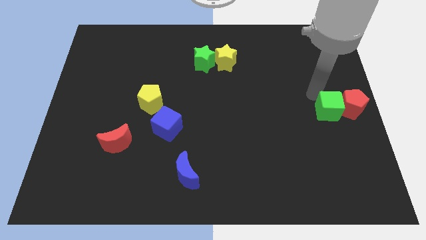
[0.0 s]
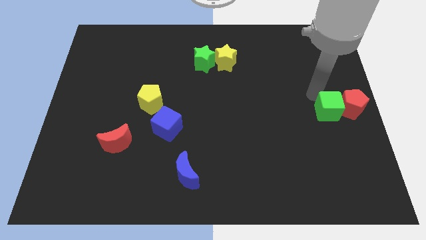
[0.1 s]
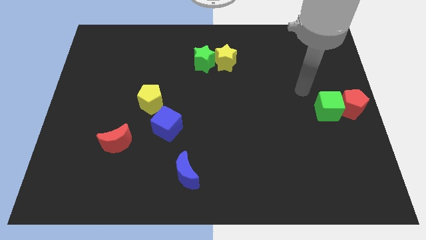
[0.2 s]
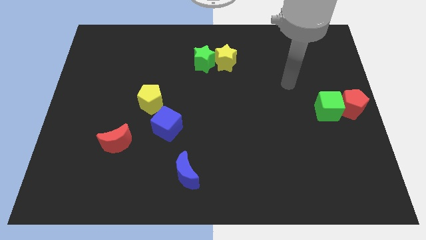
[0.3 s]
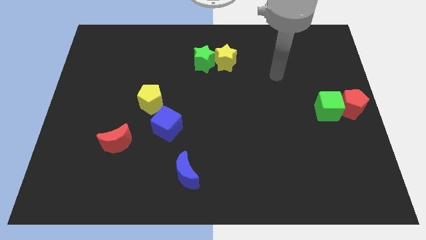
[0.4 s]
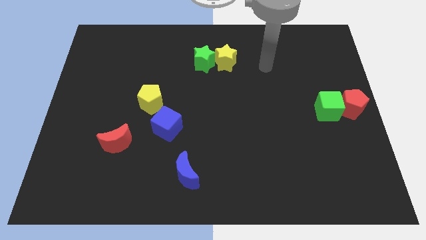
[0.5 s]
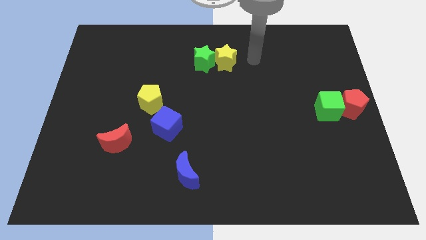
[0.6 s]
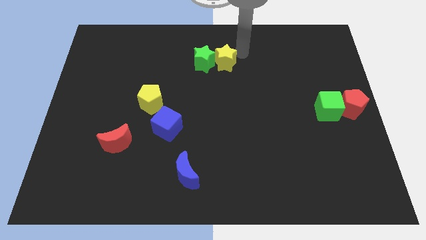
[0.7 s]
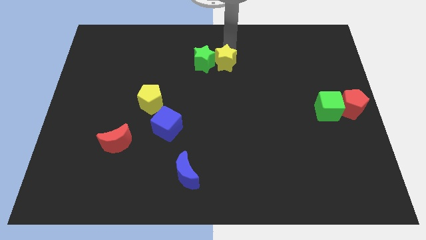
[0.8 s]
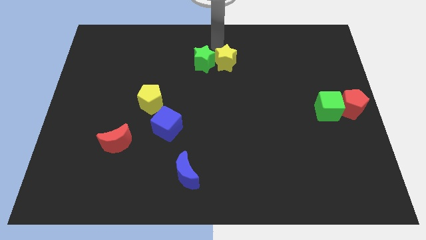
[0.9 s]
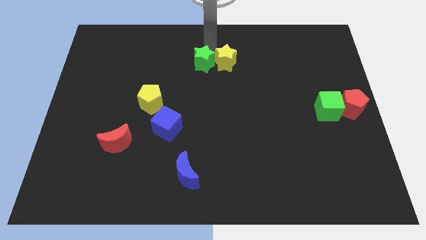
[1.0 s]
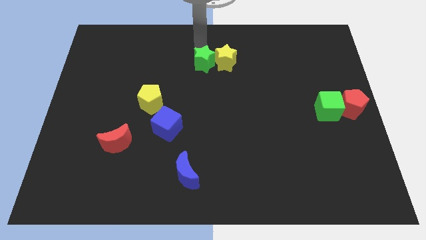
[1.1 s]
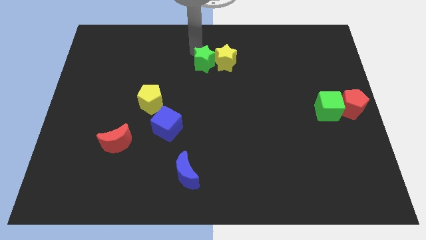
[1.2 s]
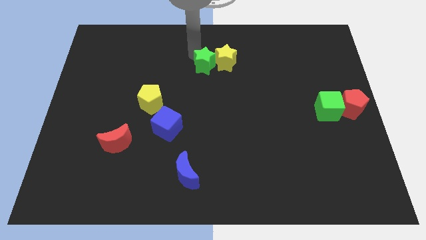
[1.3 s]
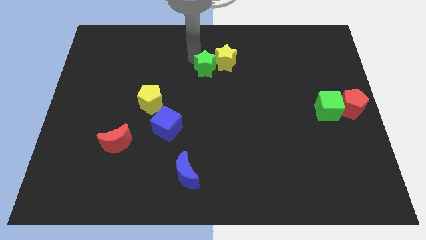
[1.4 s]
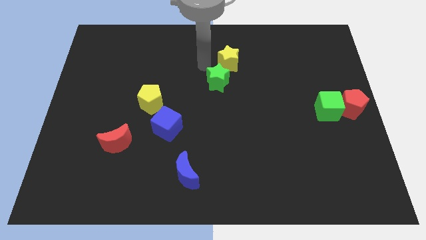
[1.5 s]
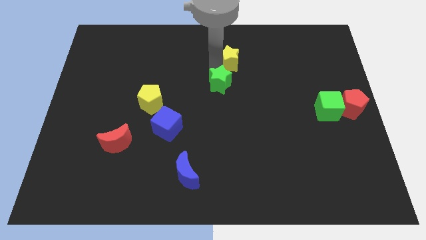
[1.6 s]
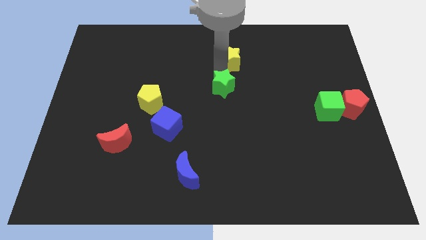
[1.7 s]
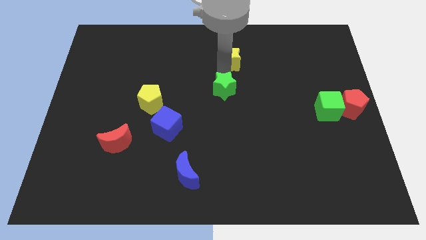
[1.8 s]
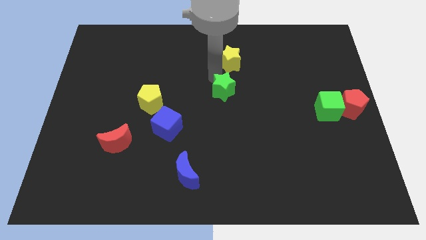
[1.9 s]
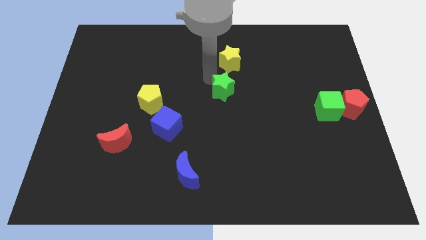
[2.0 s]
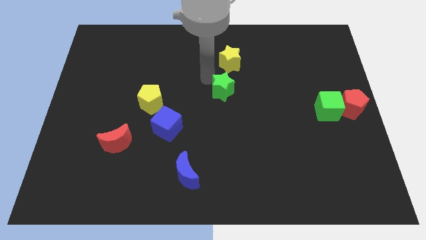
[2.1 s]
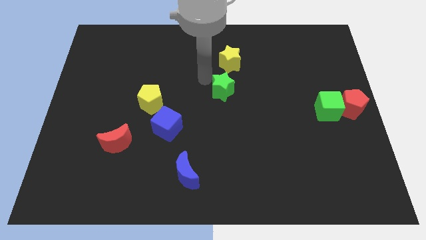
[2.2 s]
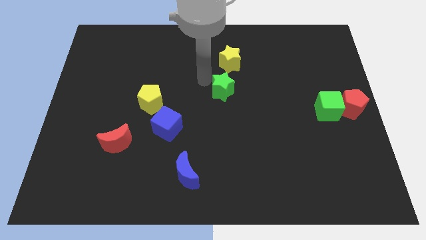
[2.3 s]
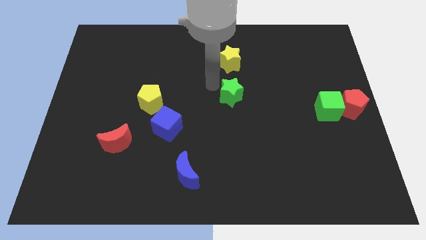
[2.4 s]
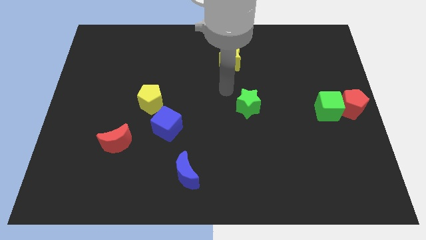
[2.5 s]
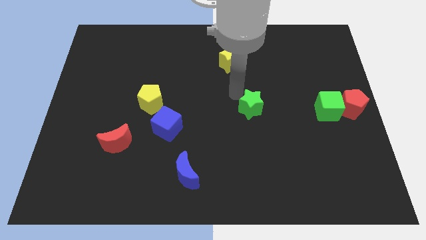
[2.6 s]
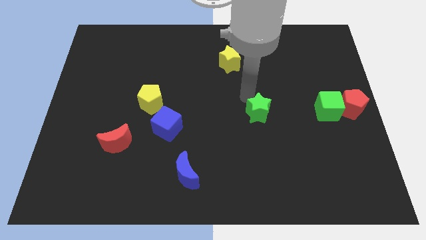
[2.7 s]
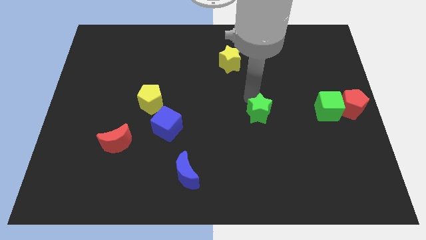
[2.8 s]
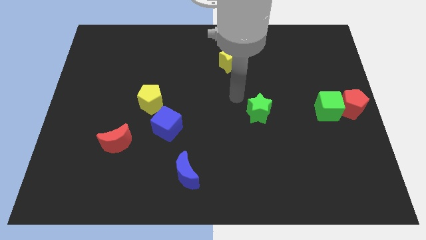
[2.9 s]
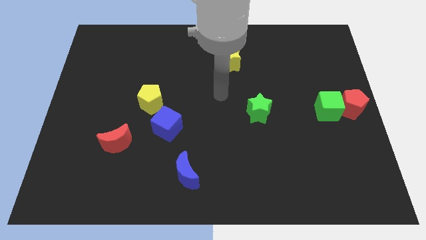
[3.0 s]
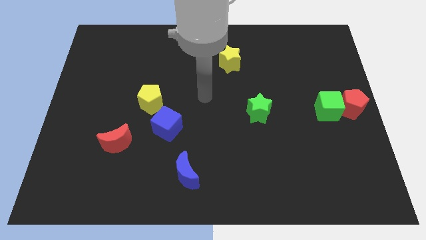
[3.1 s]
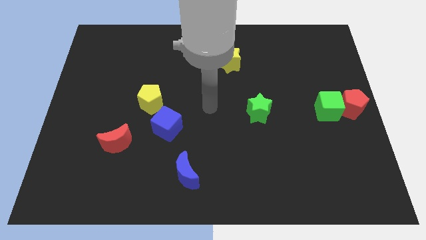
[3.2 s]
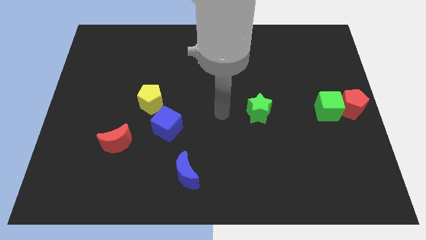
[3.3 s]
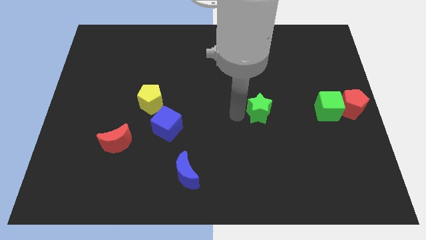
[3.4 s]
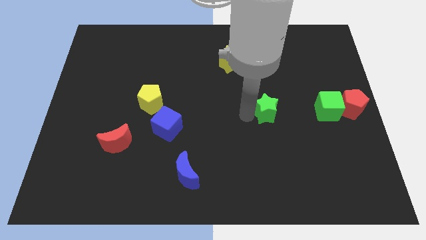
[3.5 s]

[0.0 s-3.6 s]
place the green star right to the blue cube

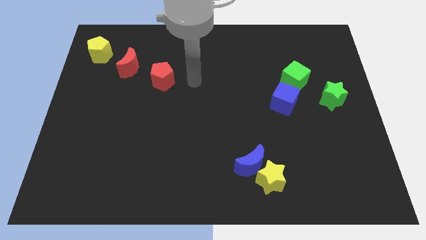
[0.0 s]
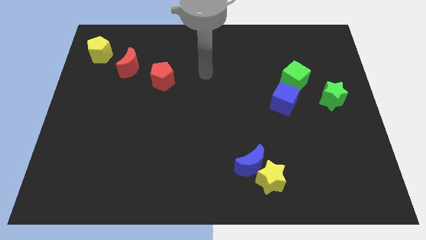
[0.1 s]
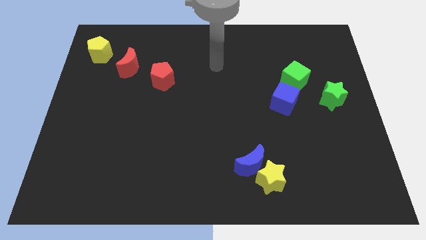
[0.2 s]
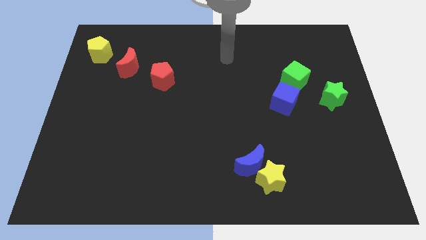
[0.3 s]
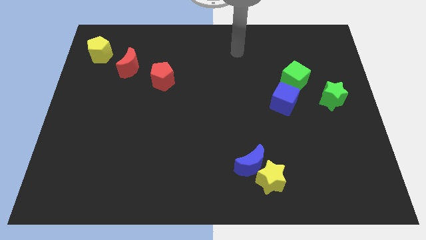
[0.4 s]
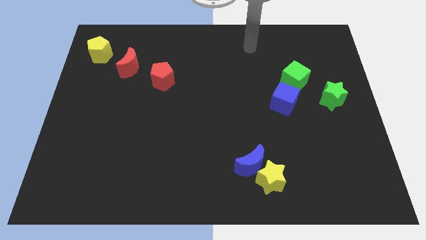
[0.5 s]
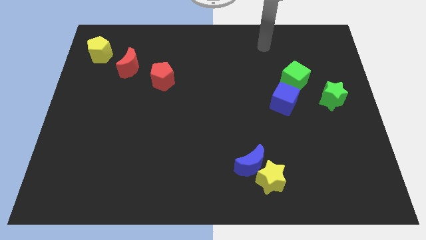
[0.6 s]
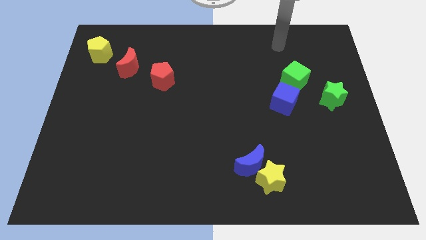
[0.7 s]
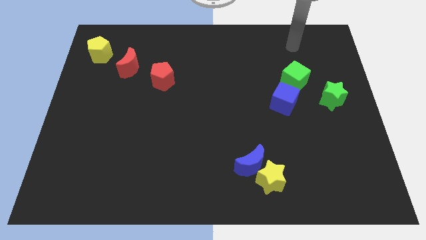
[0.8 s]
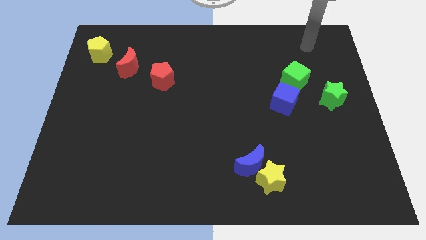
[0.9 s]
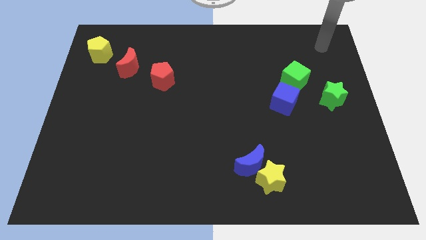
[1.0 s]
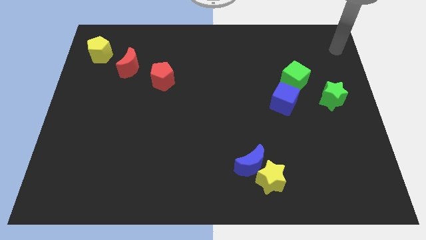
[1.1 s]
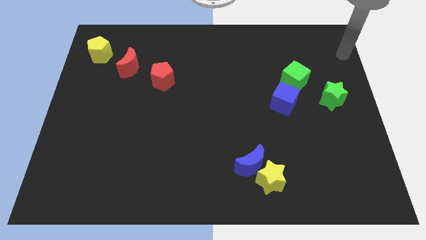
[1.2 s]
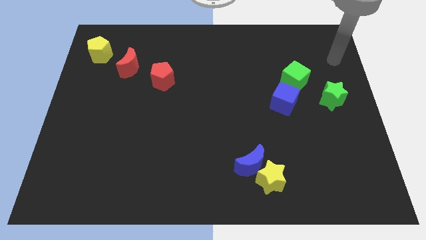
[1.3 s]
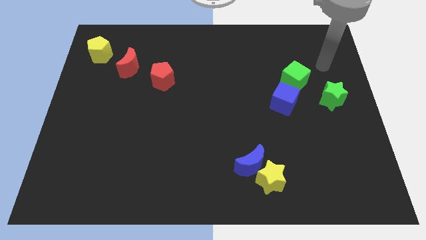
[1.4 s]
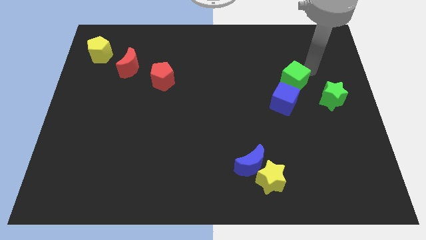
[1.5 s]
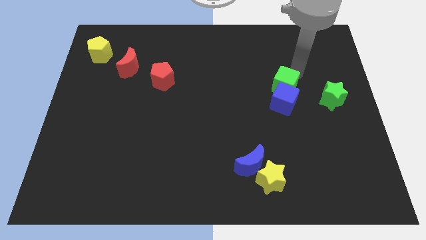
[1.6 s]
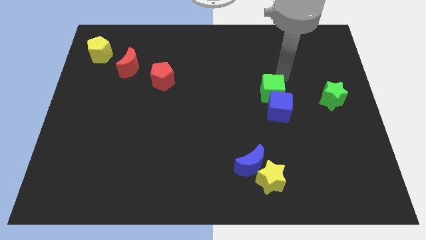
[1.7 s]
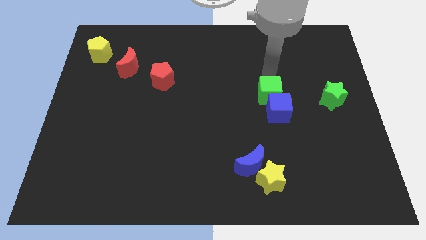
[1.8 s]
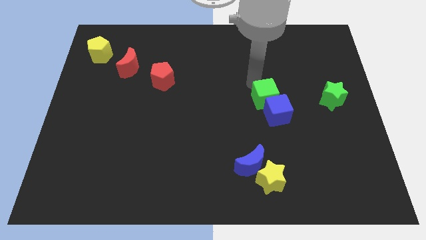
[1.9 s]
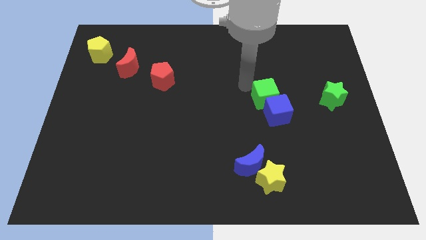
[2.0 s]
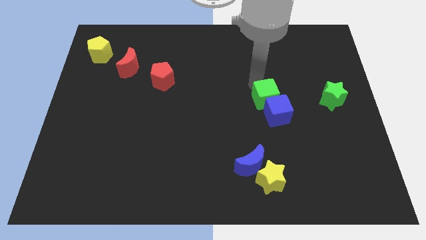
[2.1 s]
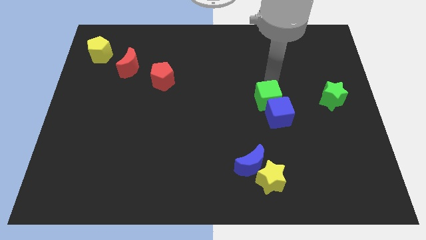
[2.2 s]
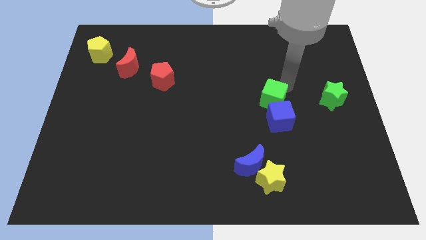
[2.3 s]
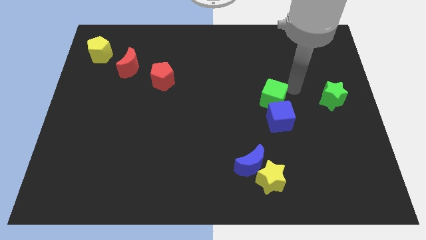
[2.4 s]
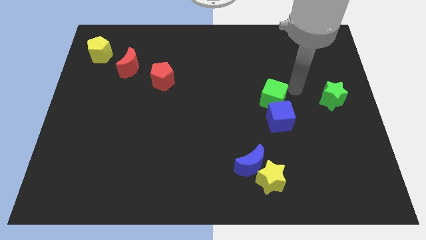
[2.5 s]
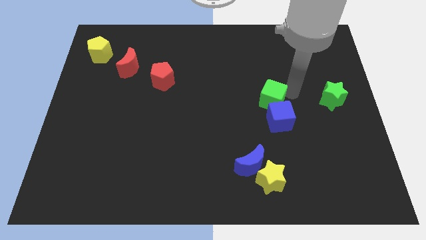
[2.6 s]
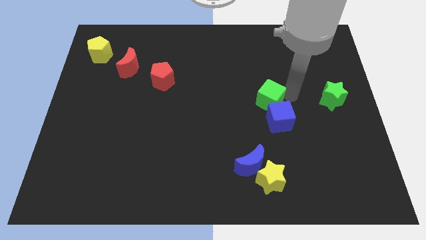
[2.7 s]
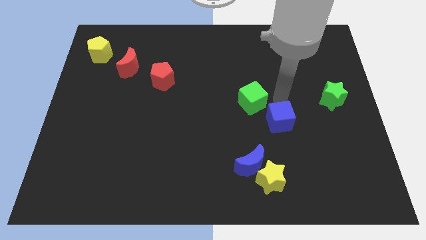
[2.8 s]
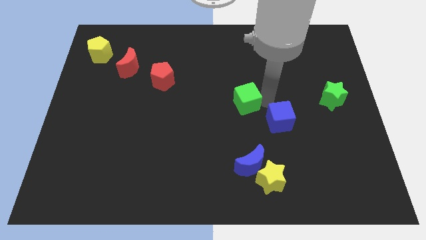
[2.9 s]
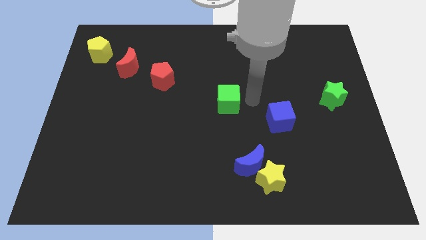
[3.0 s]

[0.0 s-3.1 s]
separate green cube and the blue cube

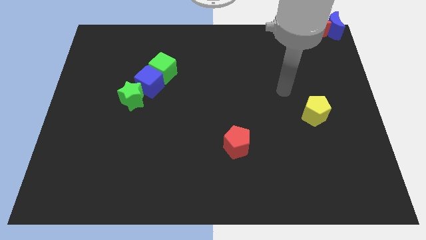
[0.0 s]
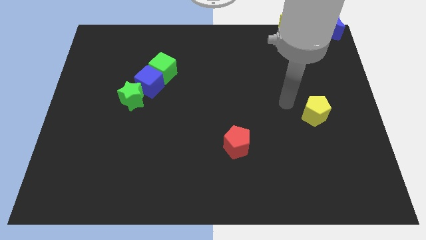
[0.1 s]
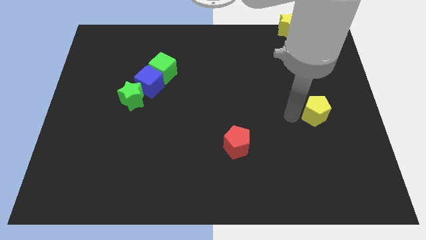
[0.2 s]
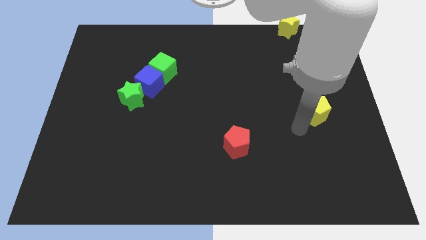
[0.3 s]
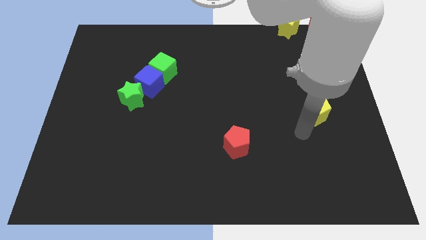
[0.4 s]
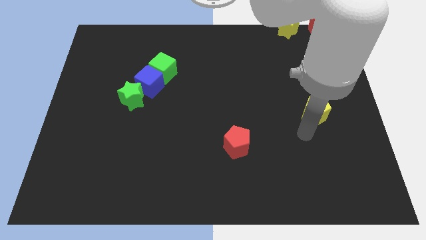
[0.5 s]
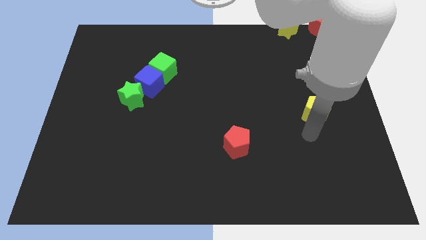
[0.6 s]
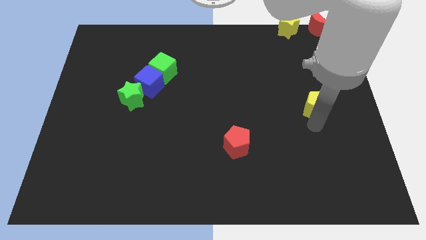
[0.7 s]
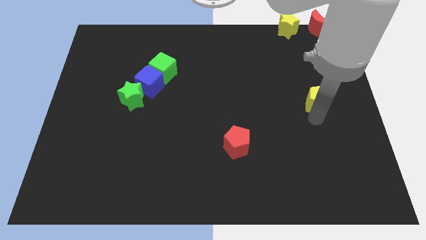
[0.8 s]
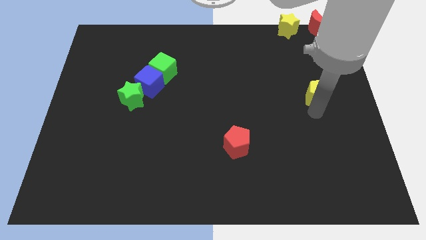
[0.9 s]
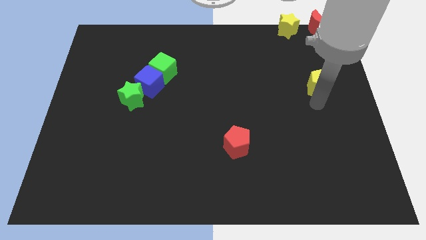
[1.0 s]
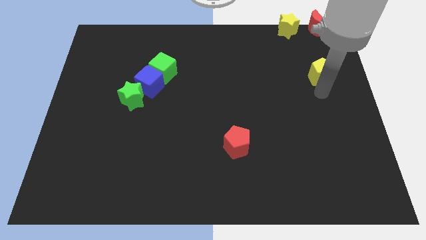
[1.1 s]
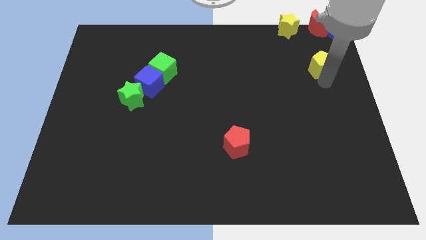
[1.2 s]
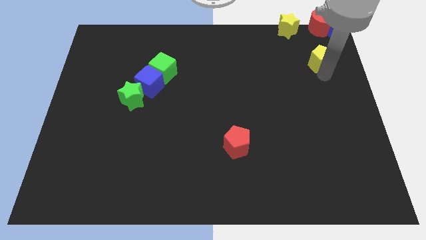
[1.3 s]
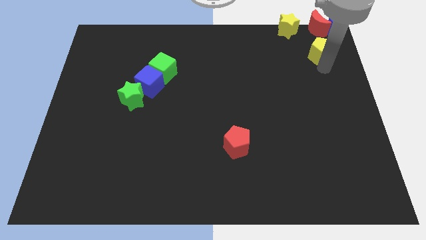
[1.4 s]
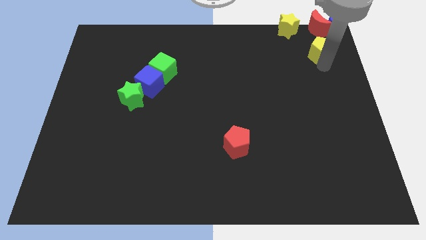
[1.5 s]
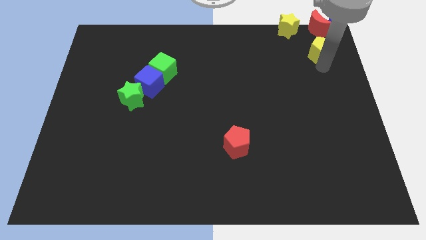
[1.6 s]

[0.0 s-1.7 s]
push the yellow pentagon below the red crescent

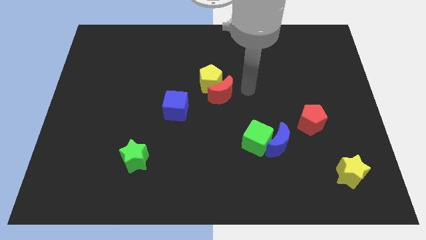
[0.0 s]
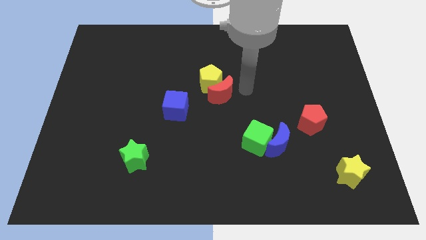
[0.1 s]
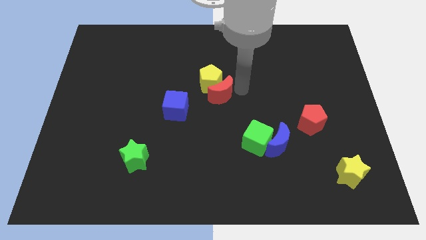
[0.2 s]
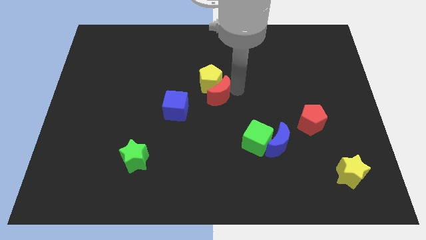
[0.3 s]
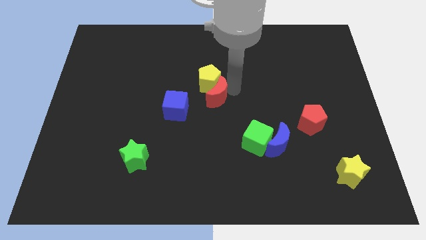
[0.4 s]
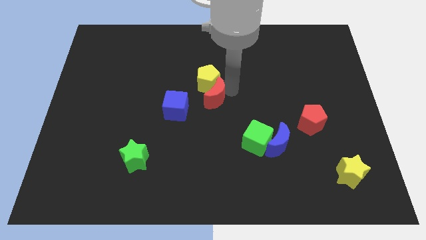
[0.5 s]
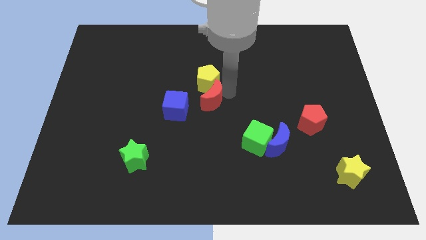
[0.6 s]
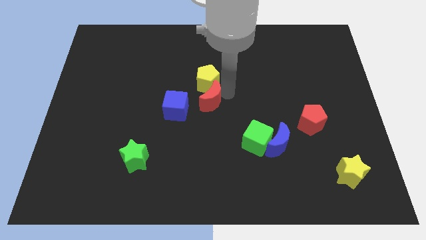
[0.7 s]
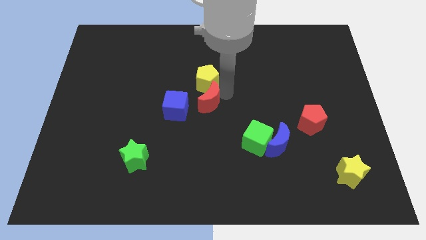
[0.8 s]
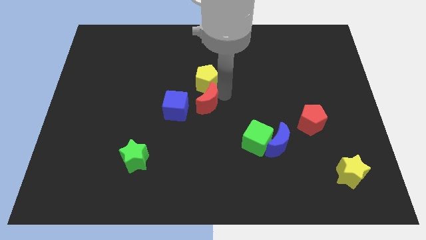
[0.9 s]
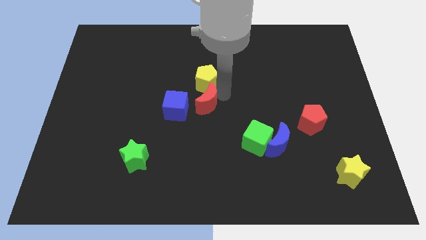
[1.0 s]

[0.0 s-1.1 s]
slide red moon towards blue cube
